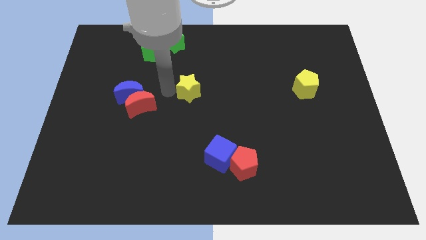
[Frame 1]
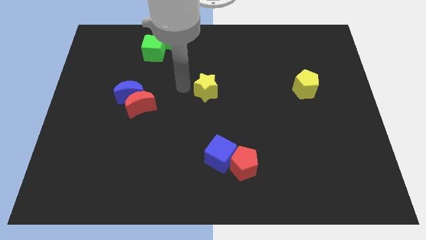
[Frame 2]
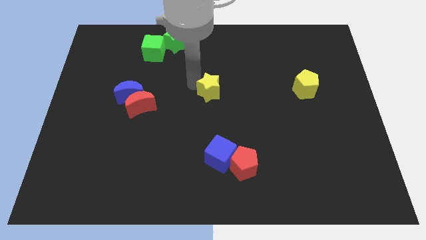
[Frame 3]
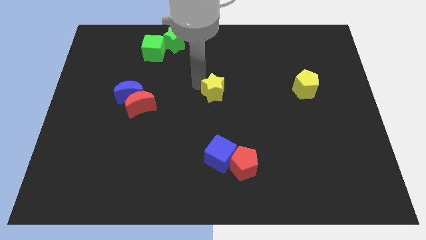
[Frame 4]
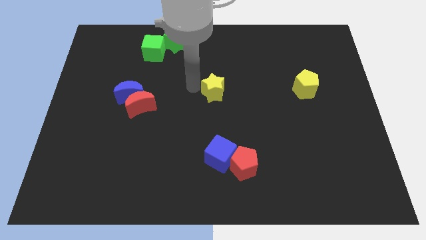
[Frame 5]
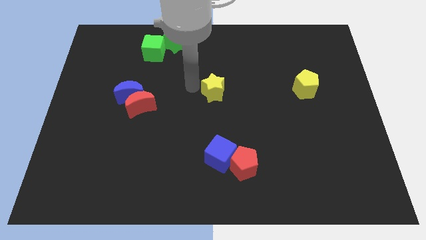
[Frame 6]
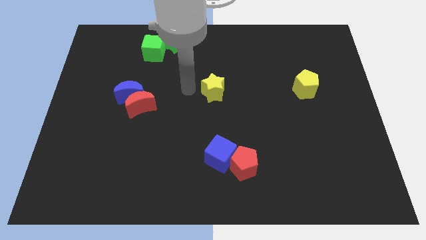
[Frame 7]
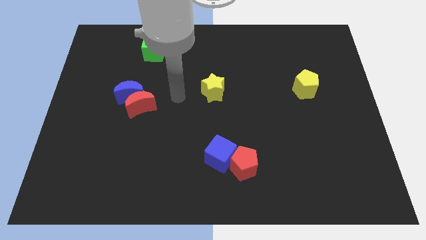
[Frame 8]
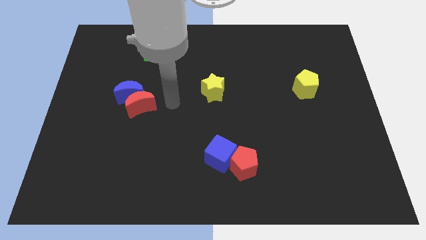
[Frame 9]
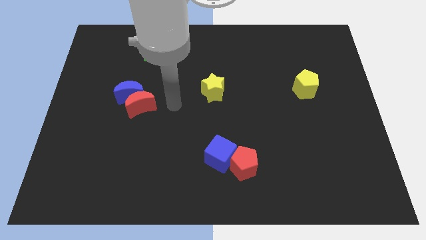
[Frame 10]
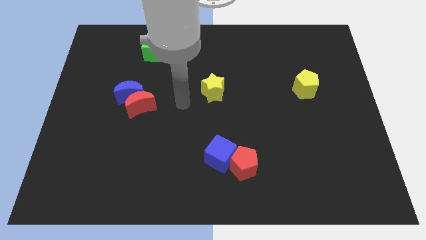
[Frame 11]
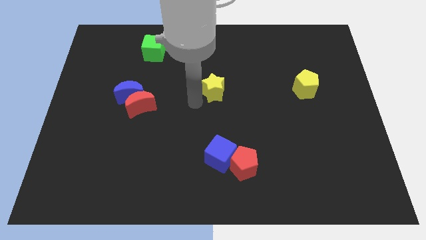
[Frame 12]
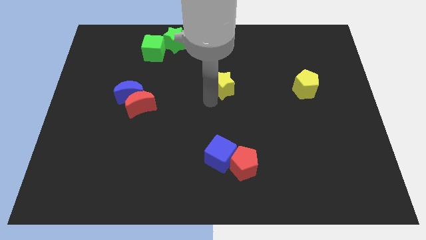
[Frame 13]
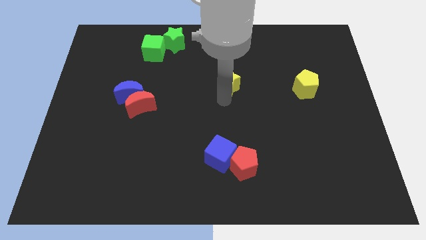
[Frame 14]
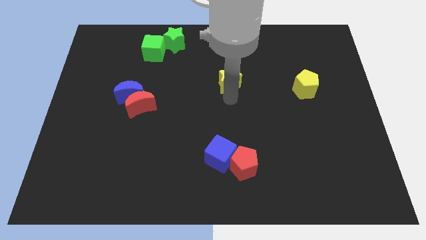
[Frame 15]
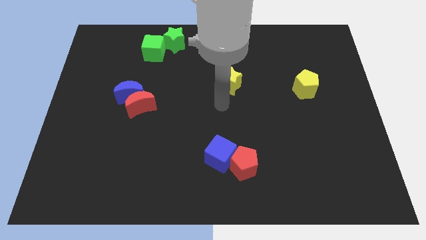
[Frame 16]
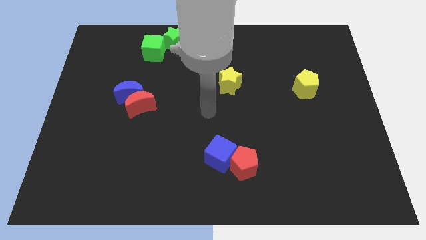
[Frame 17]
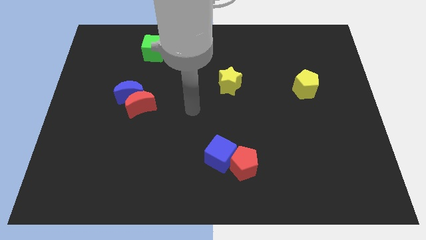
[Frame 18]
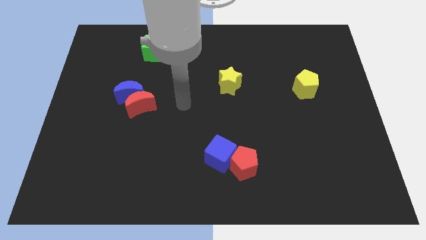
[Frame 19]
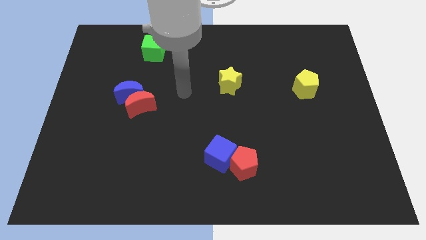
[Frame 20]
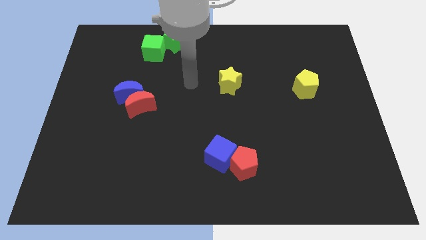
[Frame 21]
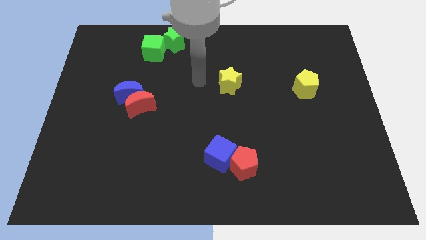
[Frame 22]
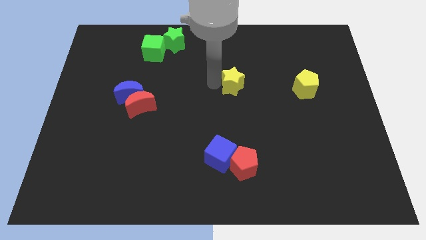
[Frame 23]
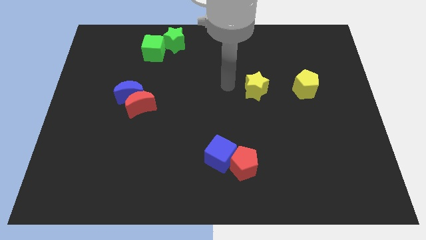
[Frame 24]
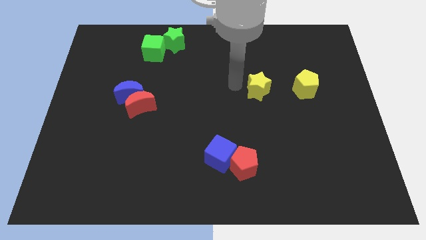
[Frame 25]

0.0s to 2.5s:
move the yellow star to the left of the yellow pentagon

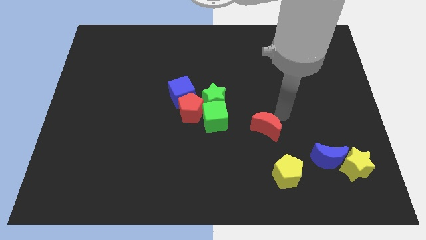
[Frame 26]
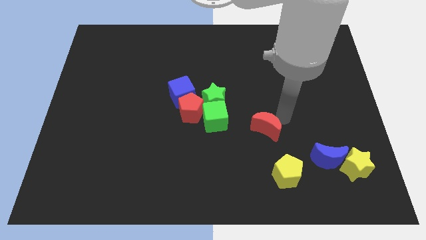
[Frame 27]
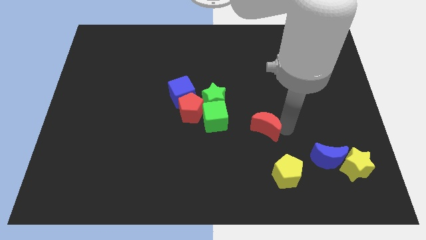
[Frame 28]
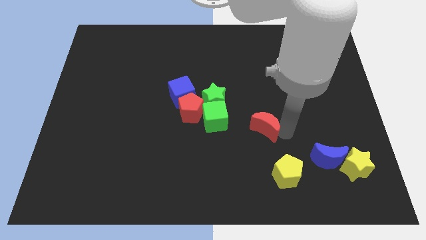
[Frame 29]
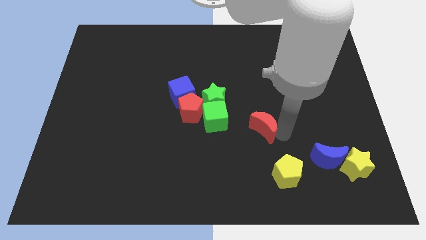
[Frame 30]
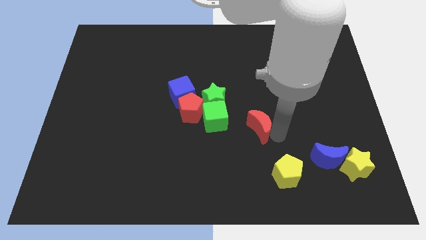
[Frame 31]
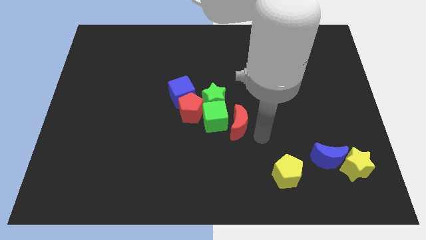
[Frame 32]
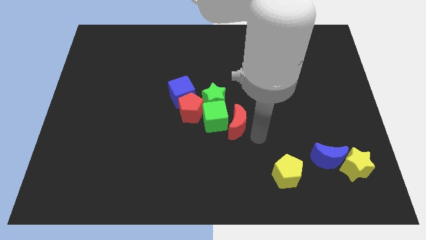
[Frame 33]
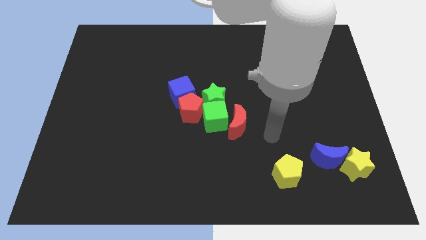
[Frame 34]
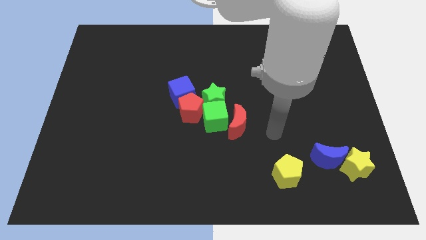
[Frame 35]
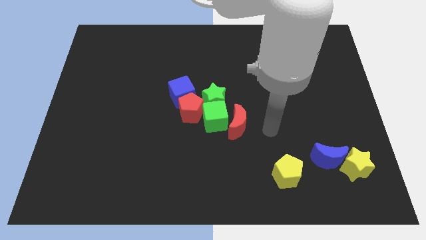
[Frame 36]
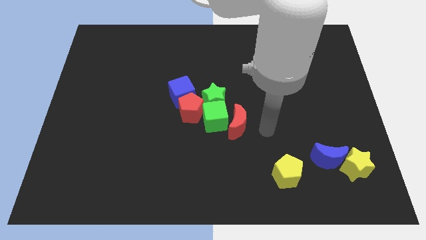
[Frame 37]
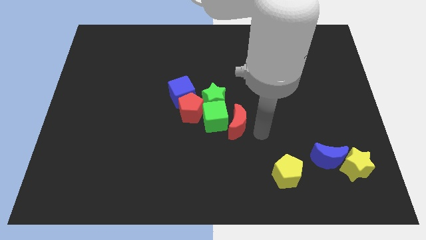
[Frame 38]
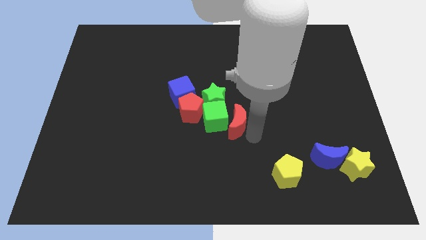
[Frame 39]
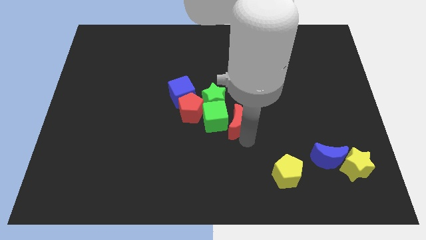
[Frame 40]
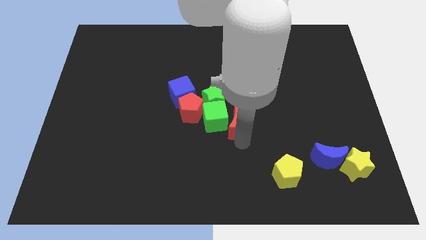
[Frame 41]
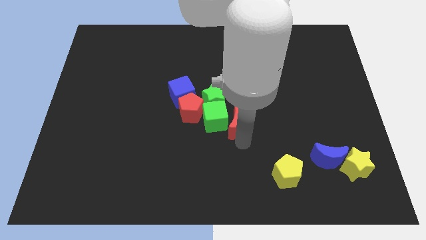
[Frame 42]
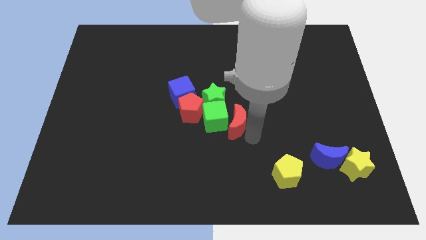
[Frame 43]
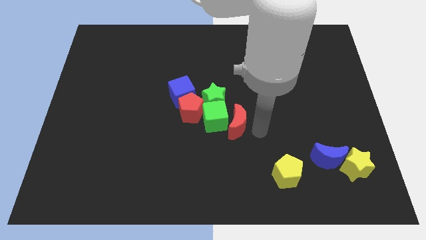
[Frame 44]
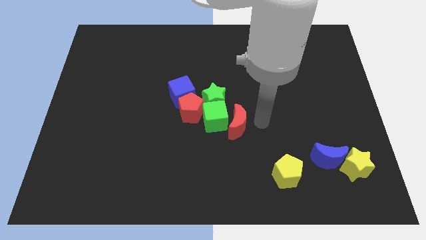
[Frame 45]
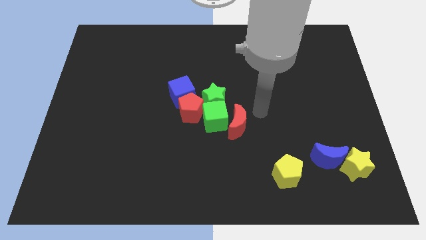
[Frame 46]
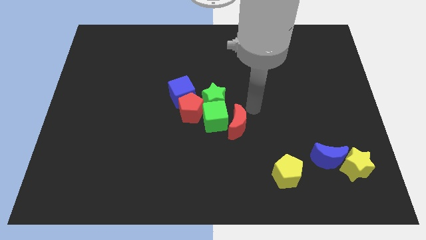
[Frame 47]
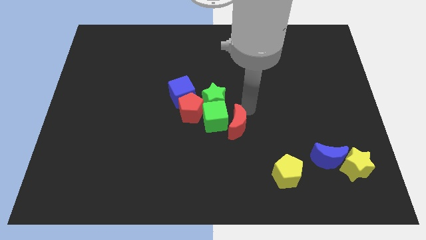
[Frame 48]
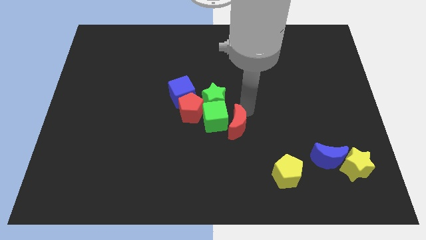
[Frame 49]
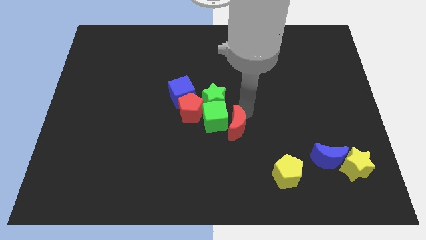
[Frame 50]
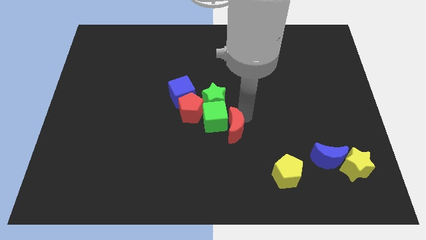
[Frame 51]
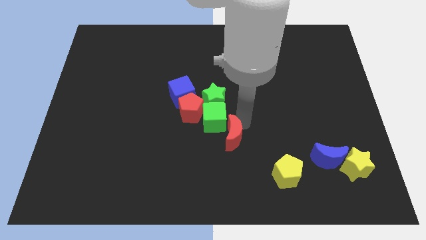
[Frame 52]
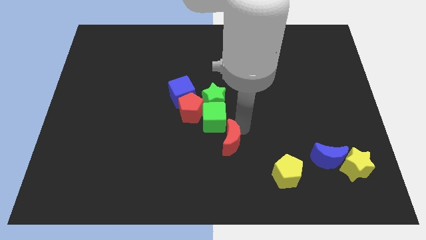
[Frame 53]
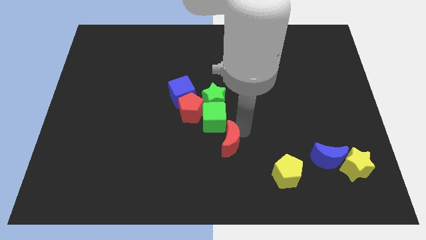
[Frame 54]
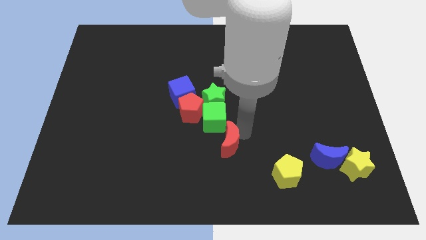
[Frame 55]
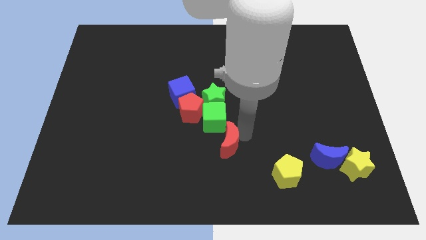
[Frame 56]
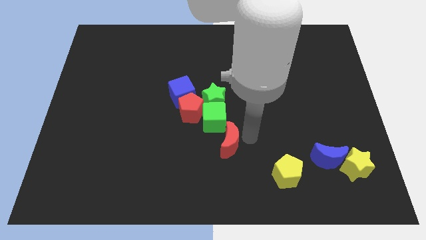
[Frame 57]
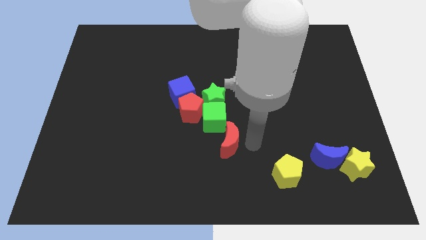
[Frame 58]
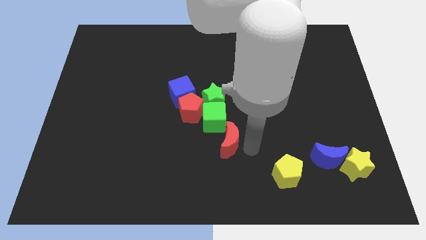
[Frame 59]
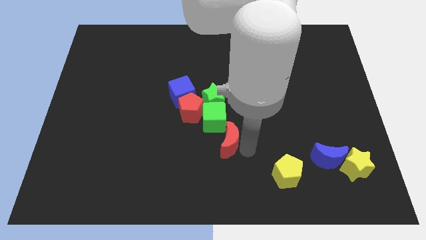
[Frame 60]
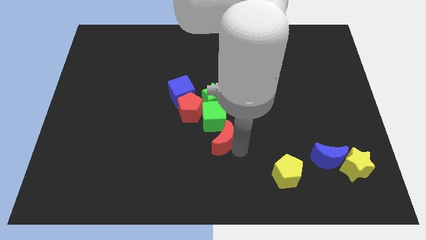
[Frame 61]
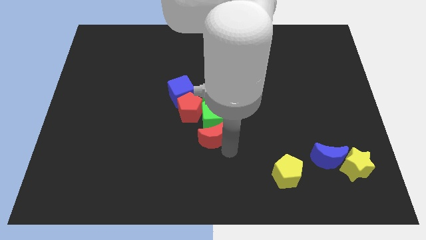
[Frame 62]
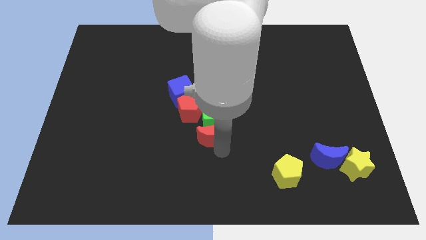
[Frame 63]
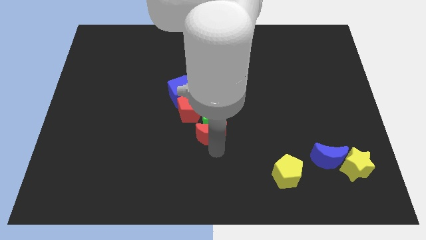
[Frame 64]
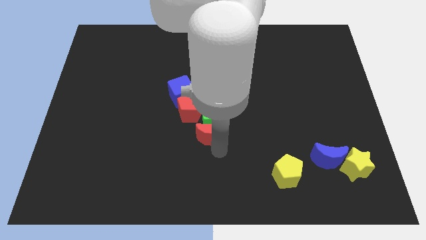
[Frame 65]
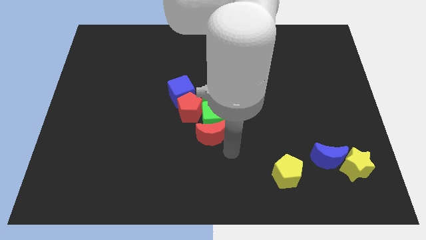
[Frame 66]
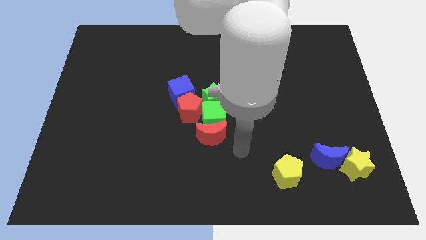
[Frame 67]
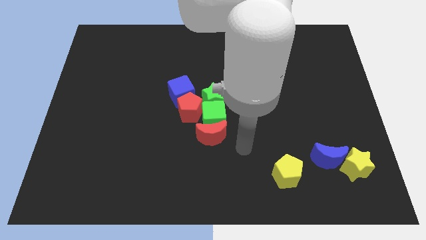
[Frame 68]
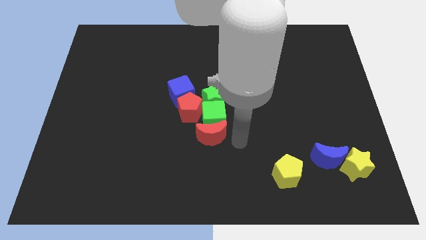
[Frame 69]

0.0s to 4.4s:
move the red crescent towards the bottom of the green cube

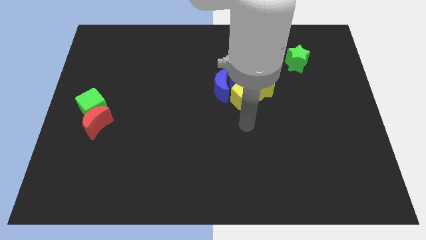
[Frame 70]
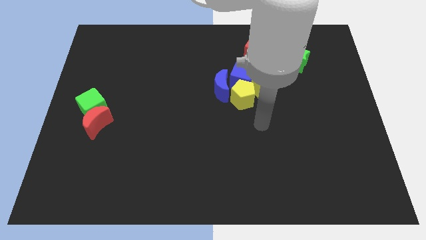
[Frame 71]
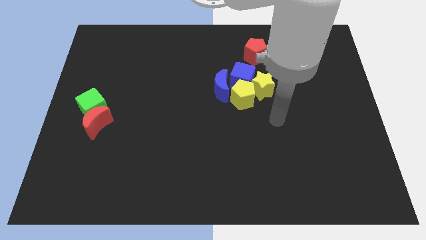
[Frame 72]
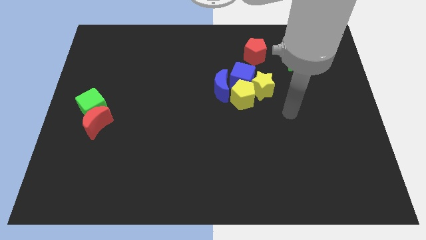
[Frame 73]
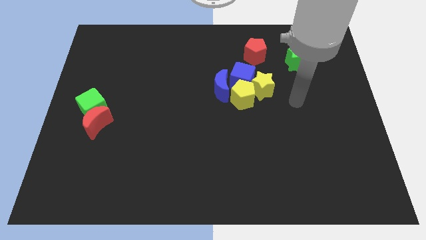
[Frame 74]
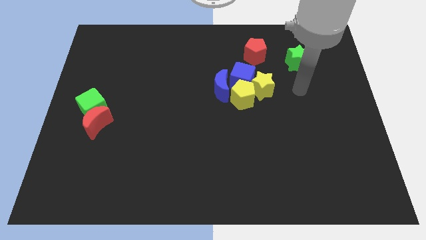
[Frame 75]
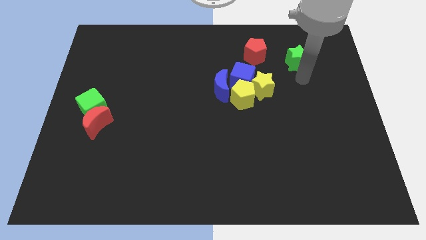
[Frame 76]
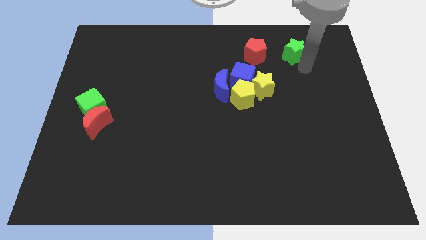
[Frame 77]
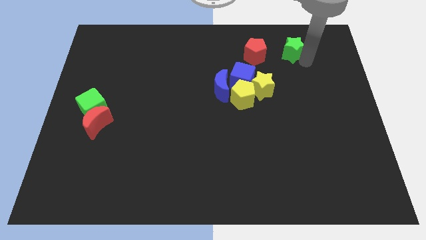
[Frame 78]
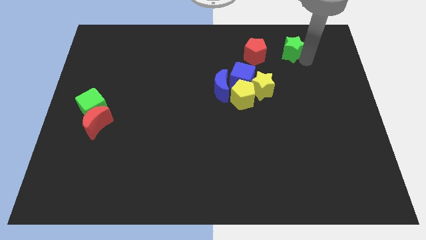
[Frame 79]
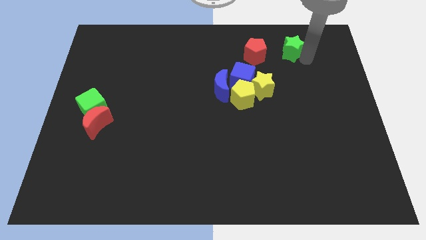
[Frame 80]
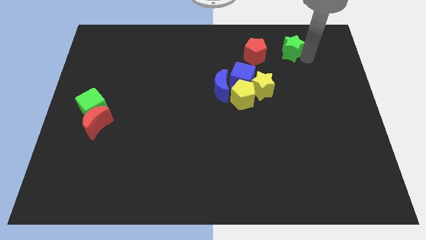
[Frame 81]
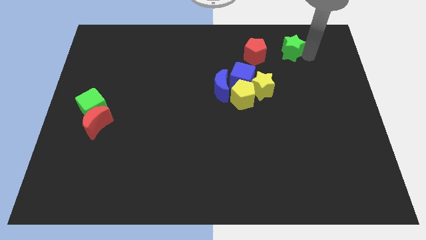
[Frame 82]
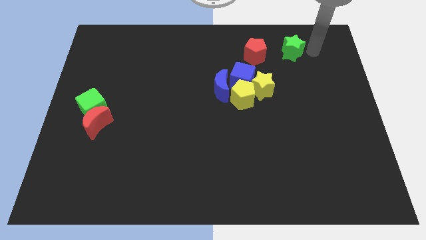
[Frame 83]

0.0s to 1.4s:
adjust the green star to the right side of the red pentagon

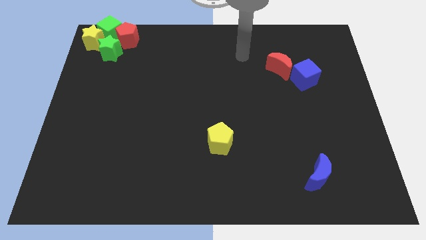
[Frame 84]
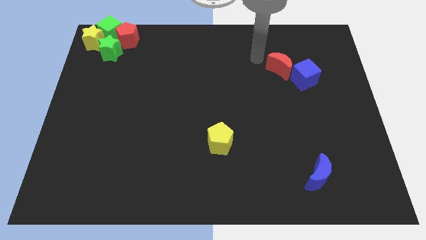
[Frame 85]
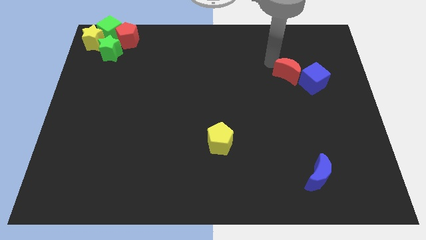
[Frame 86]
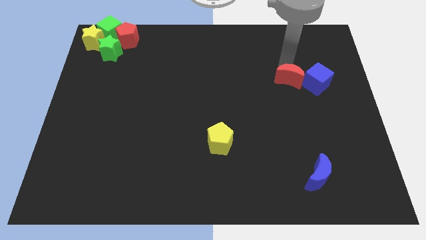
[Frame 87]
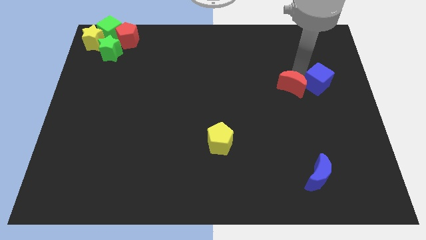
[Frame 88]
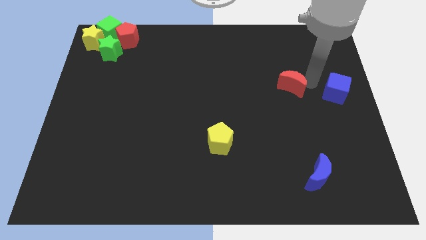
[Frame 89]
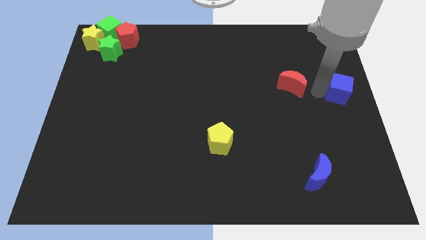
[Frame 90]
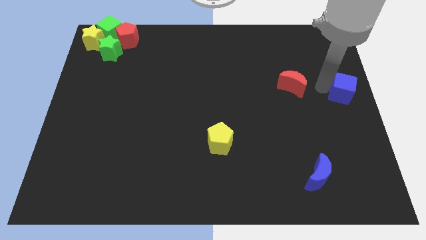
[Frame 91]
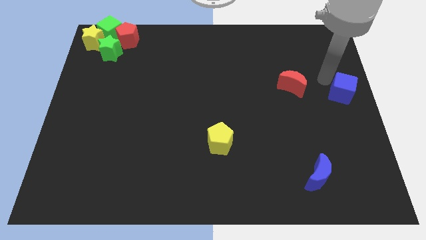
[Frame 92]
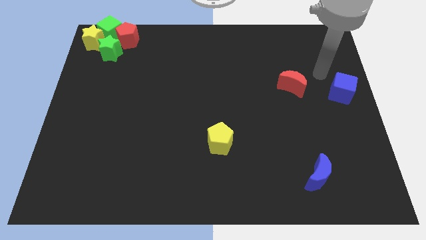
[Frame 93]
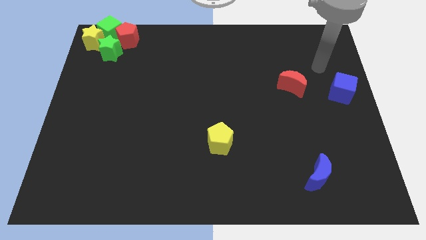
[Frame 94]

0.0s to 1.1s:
push the blue cube along with red crescent
